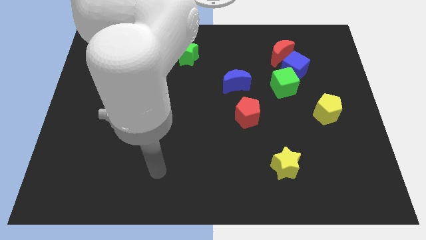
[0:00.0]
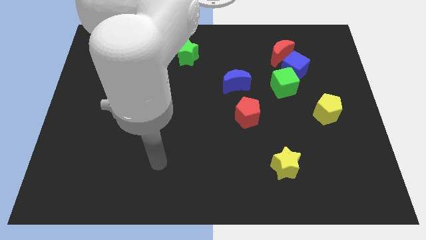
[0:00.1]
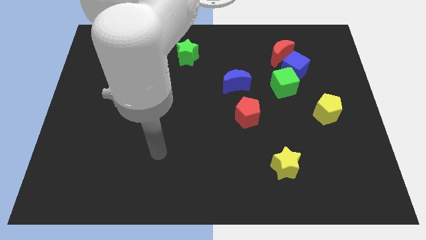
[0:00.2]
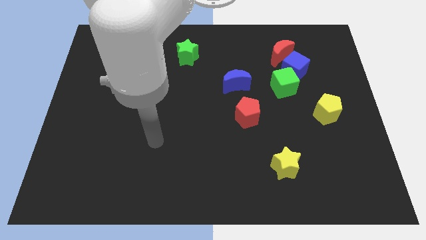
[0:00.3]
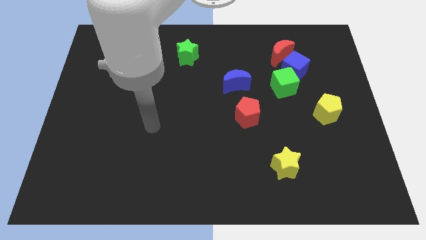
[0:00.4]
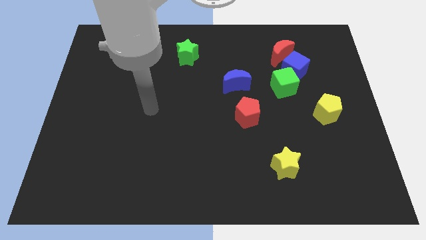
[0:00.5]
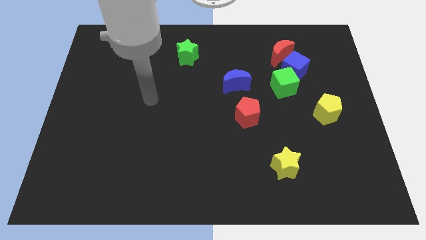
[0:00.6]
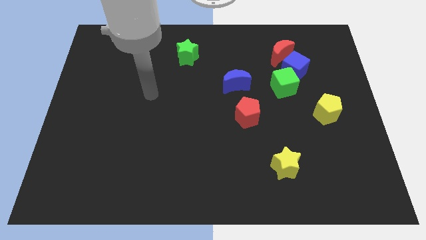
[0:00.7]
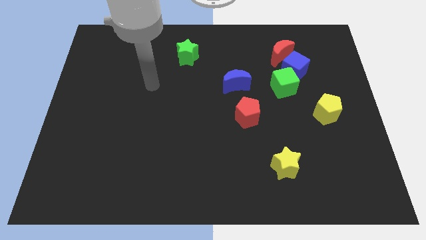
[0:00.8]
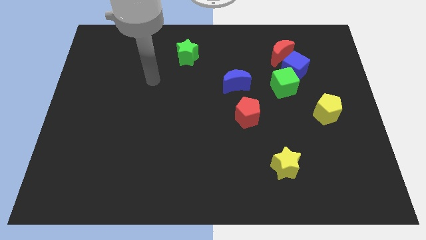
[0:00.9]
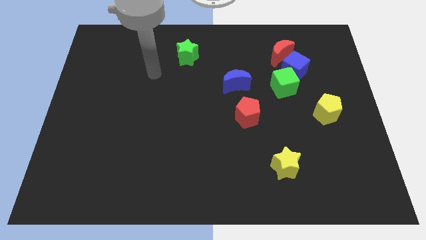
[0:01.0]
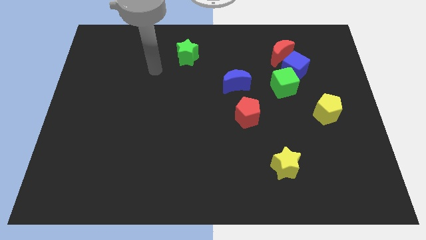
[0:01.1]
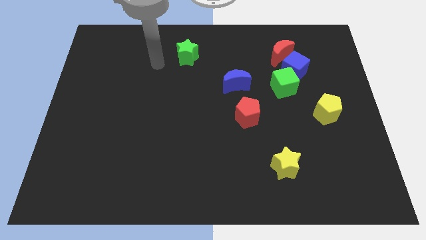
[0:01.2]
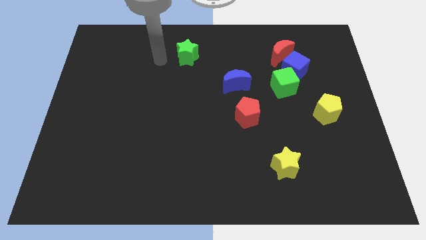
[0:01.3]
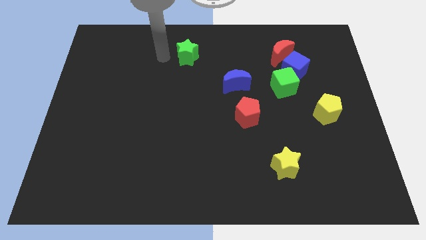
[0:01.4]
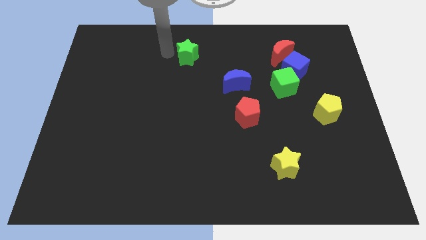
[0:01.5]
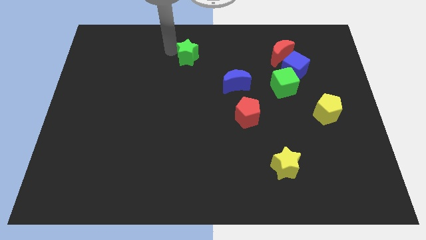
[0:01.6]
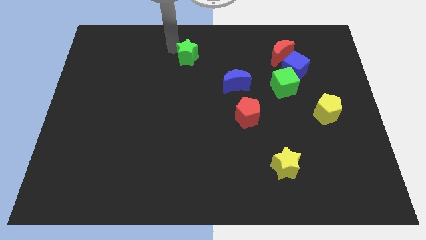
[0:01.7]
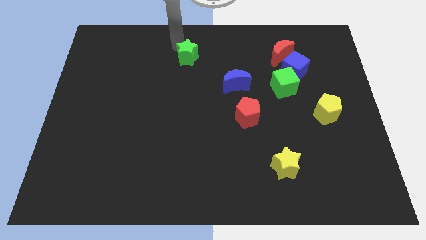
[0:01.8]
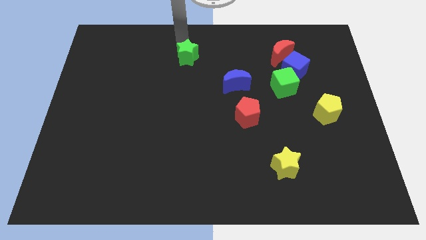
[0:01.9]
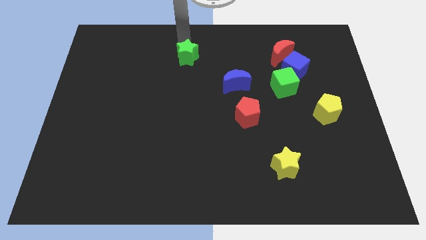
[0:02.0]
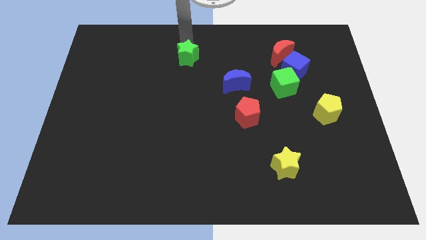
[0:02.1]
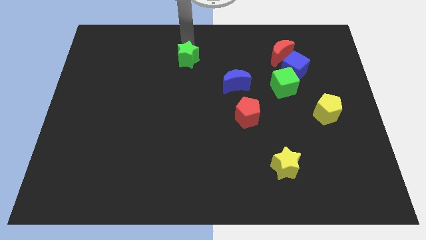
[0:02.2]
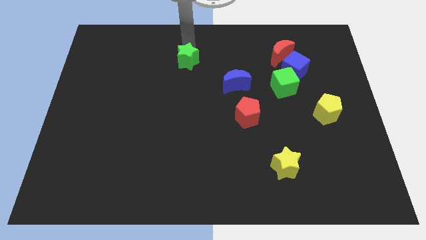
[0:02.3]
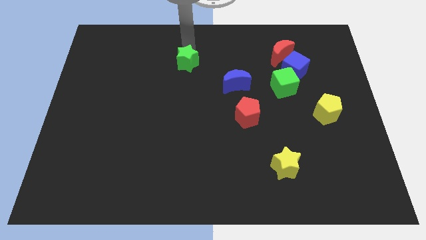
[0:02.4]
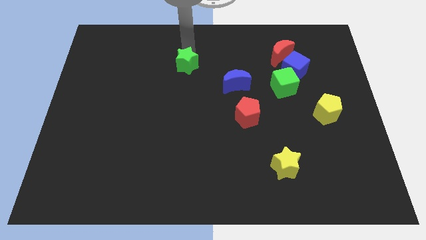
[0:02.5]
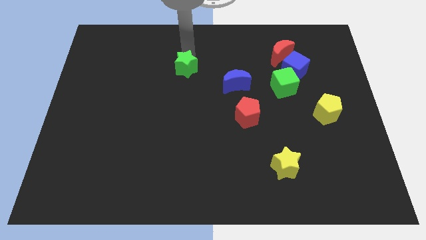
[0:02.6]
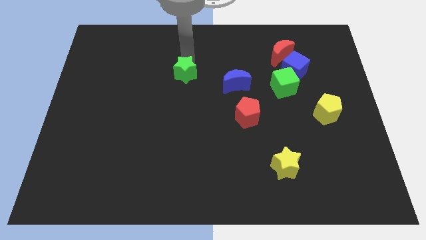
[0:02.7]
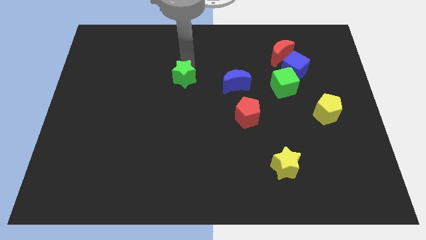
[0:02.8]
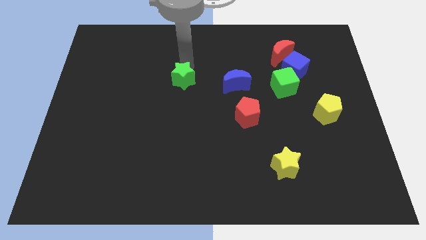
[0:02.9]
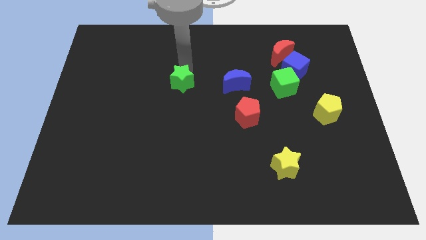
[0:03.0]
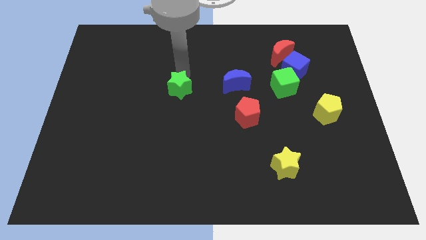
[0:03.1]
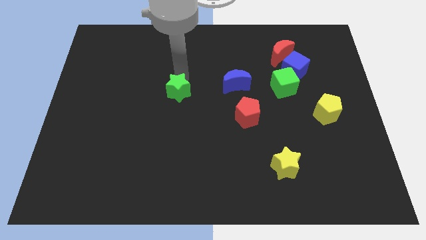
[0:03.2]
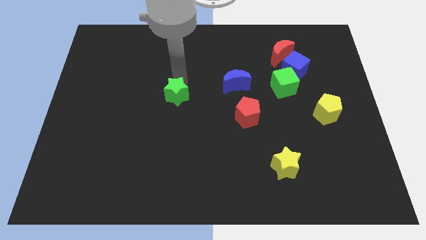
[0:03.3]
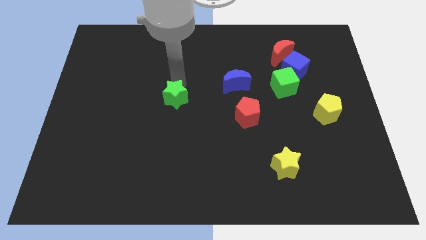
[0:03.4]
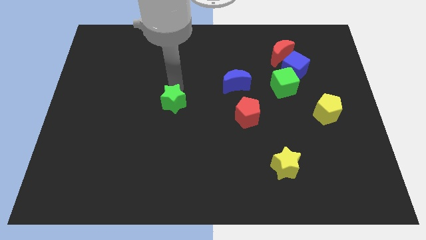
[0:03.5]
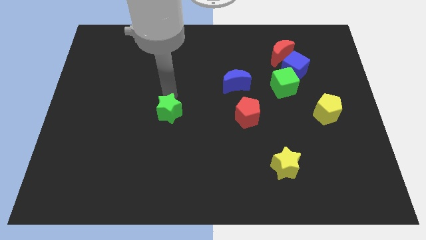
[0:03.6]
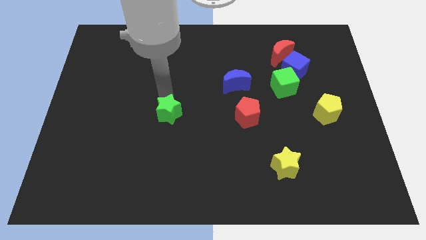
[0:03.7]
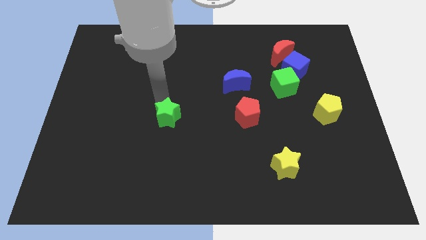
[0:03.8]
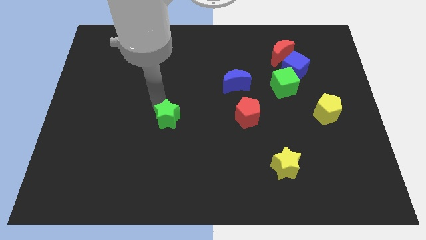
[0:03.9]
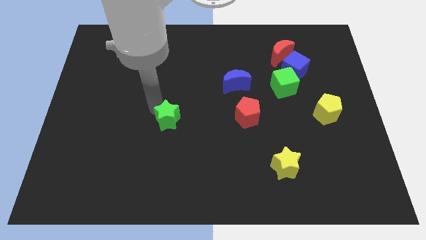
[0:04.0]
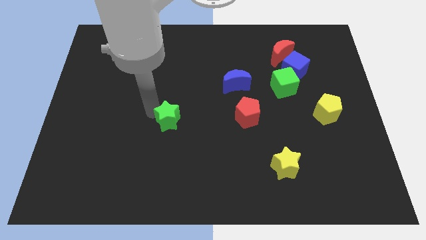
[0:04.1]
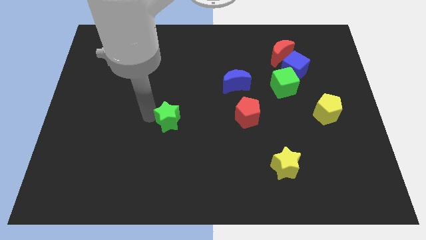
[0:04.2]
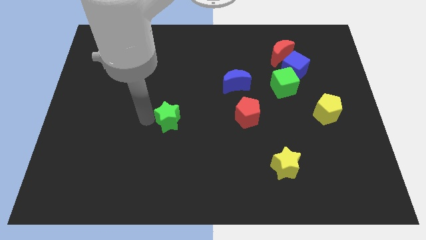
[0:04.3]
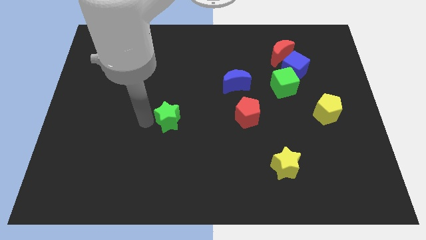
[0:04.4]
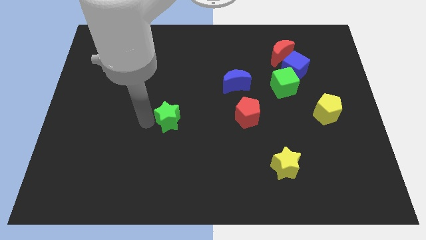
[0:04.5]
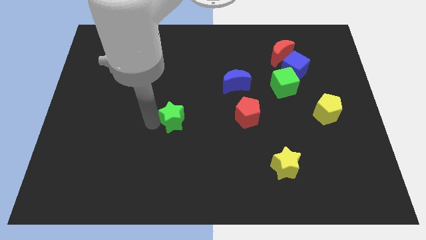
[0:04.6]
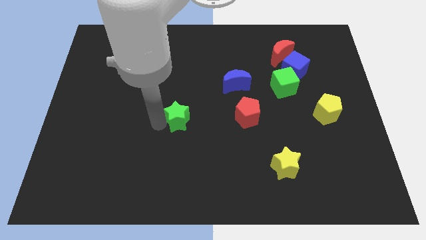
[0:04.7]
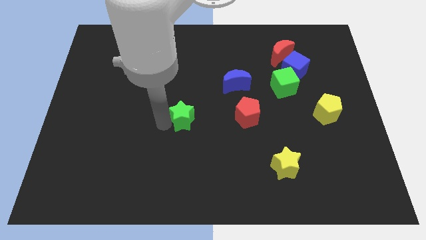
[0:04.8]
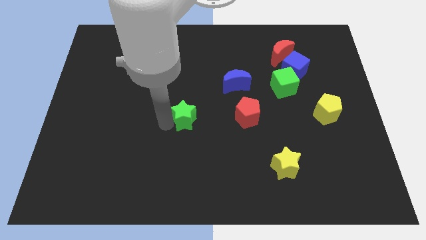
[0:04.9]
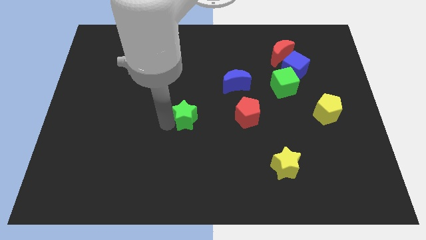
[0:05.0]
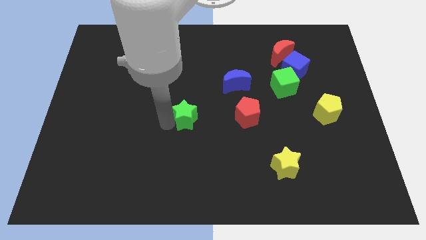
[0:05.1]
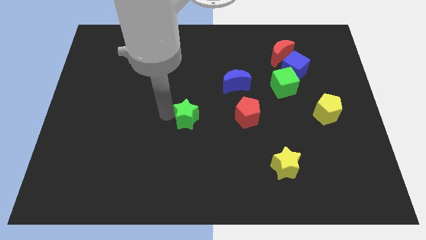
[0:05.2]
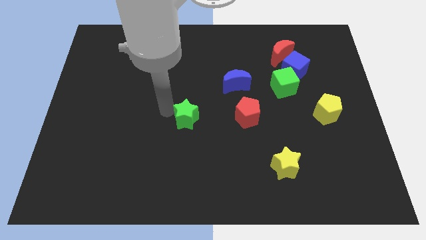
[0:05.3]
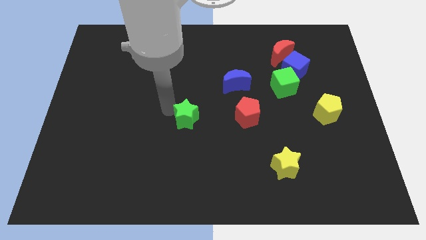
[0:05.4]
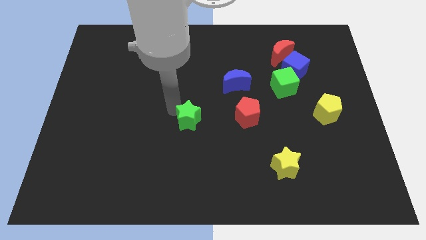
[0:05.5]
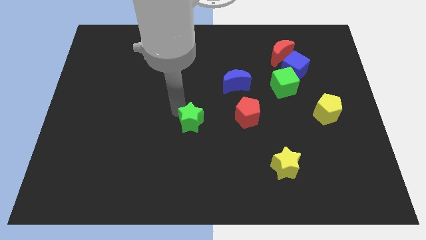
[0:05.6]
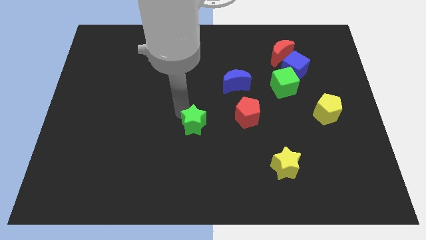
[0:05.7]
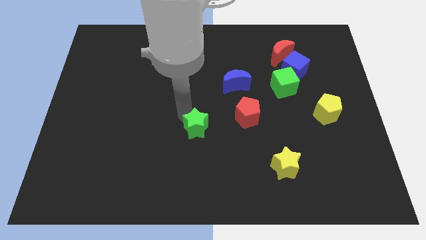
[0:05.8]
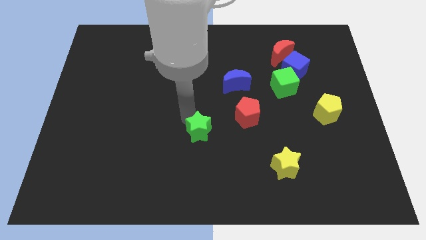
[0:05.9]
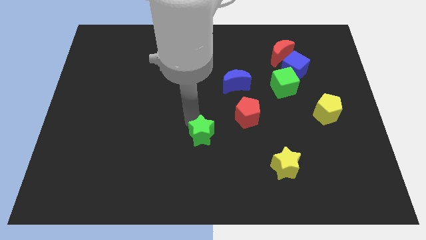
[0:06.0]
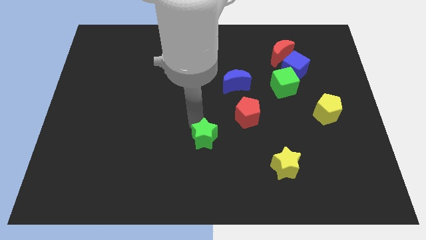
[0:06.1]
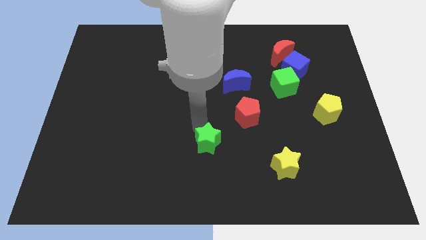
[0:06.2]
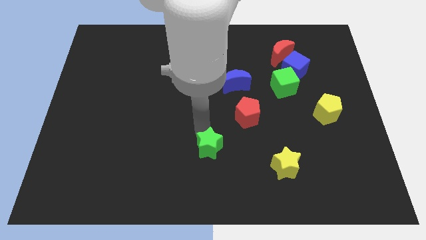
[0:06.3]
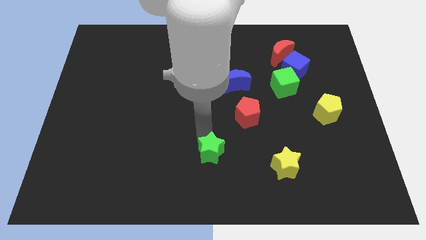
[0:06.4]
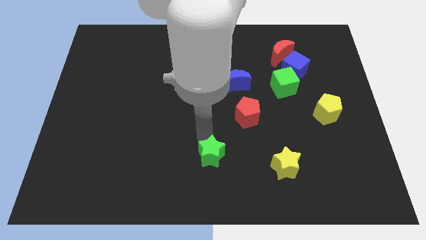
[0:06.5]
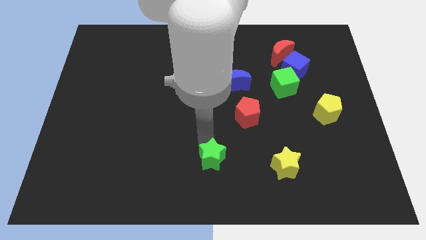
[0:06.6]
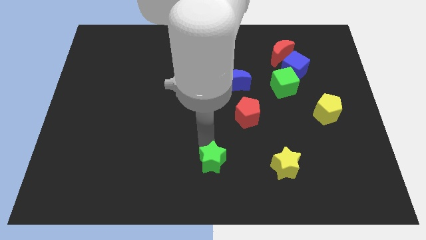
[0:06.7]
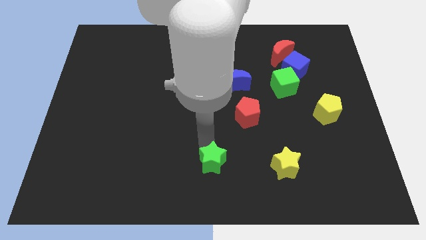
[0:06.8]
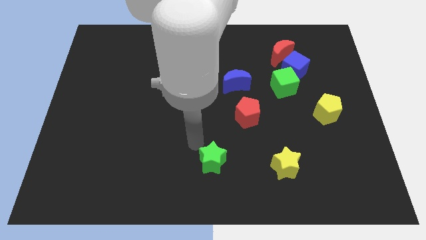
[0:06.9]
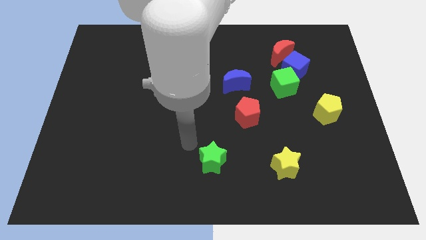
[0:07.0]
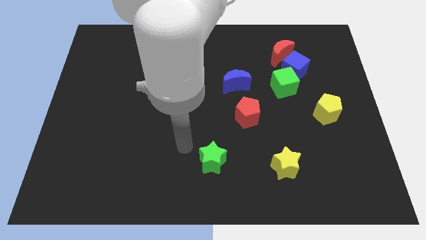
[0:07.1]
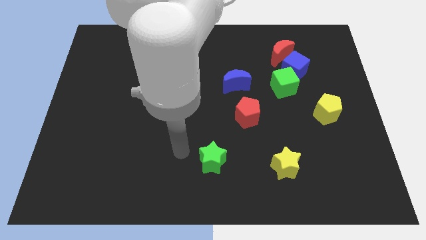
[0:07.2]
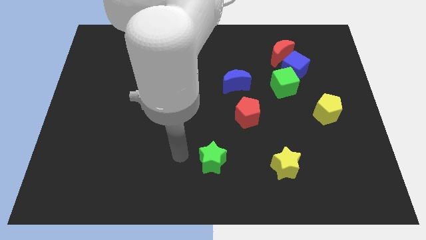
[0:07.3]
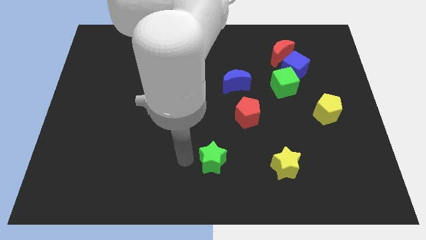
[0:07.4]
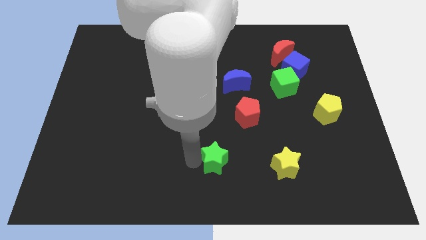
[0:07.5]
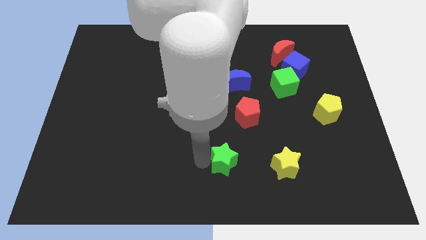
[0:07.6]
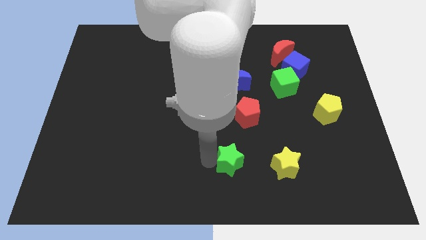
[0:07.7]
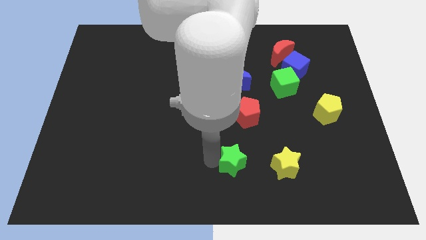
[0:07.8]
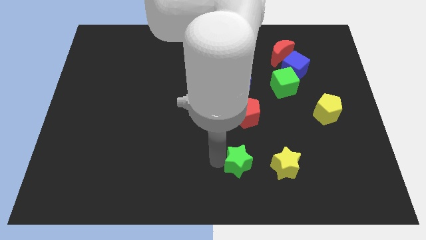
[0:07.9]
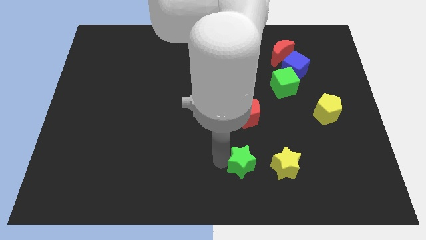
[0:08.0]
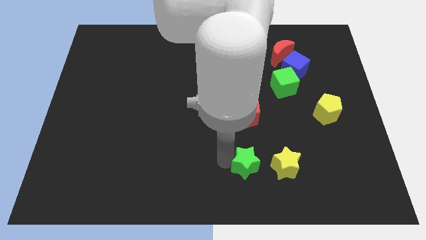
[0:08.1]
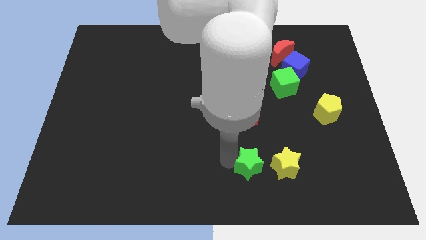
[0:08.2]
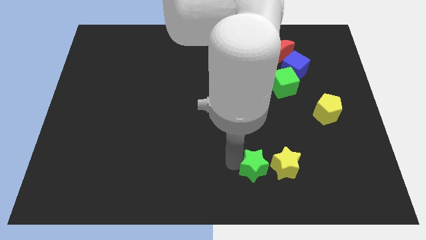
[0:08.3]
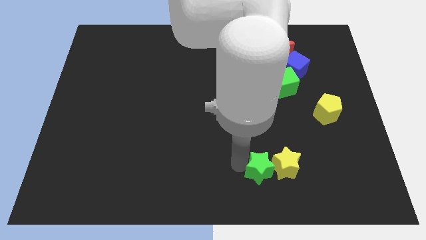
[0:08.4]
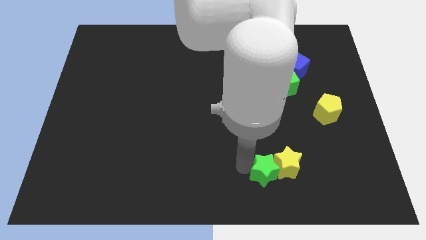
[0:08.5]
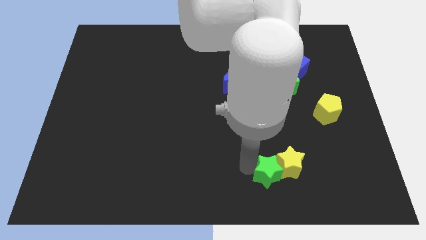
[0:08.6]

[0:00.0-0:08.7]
push the green star next to the yellow star
